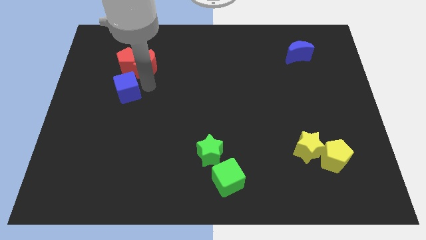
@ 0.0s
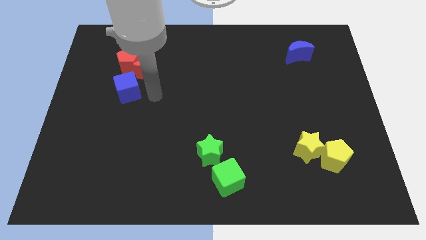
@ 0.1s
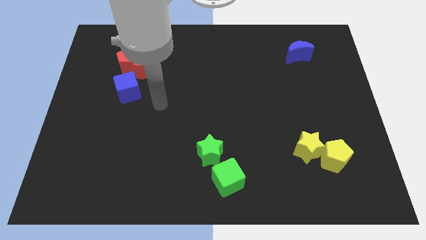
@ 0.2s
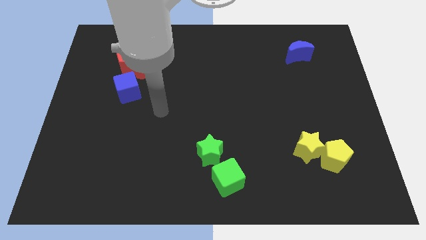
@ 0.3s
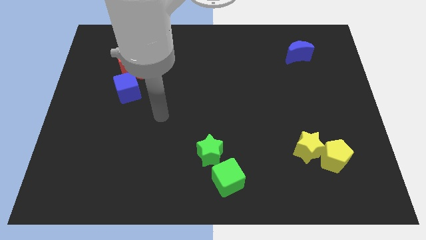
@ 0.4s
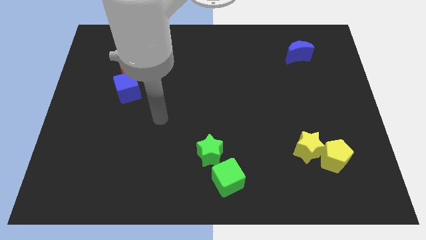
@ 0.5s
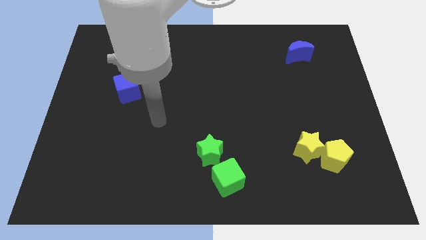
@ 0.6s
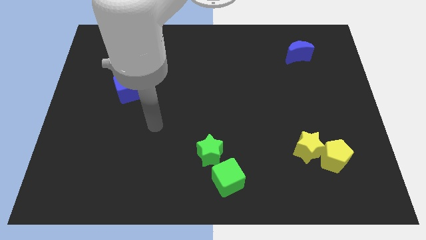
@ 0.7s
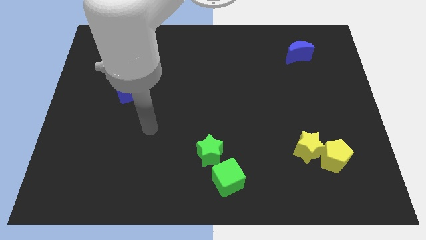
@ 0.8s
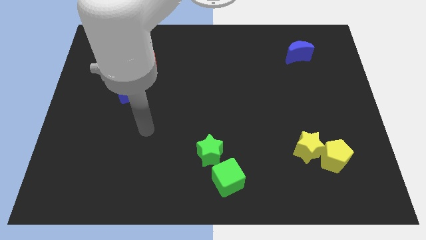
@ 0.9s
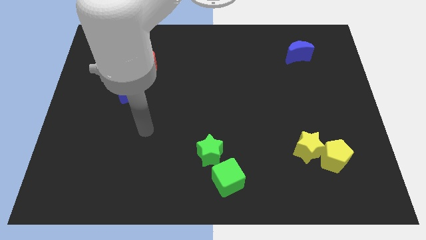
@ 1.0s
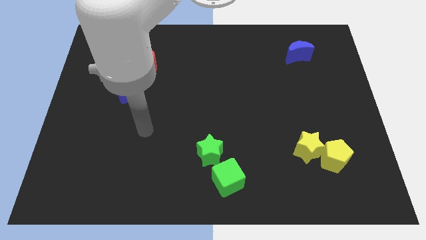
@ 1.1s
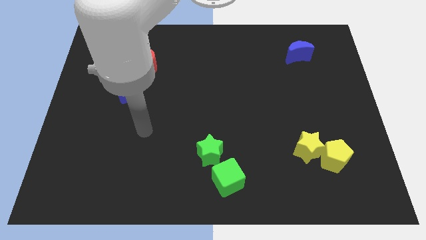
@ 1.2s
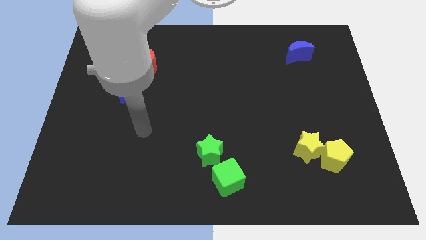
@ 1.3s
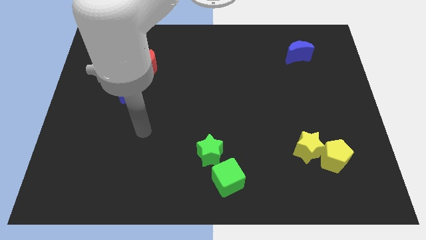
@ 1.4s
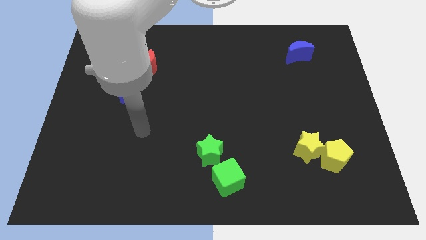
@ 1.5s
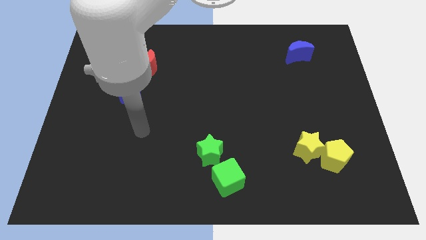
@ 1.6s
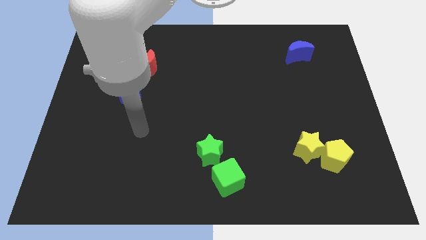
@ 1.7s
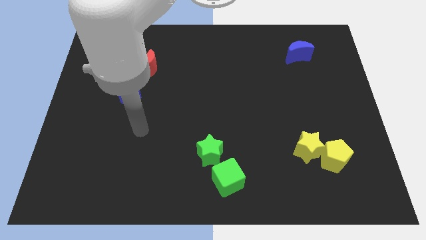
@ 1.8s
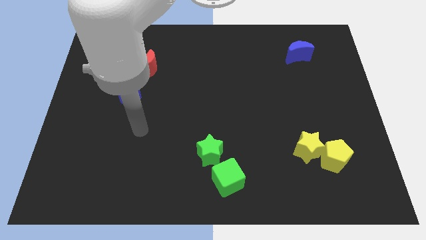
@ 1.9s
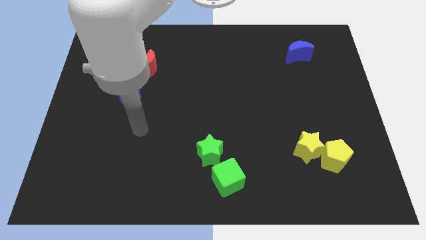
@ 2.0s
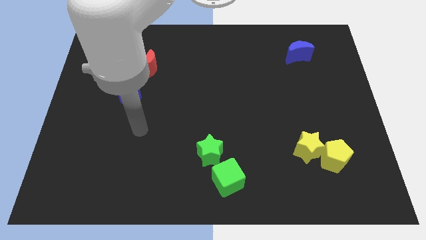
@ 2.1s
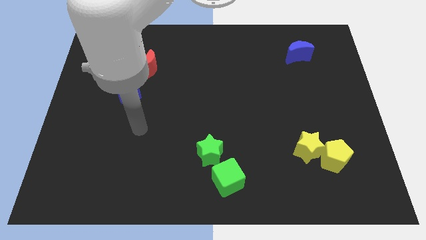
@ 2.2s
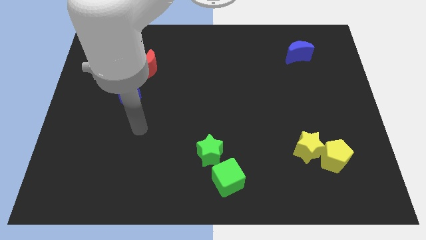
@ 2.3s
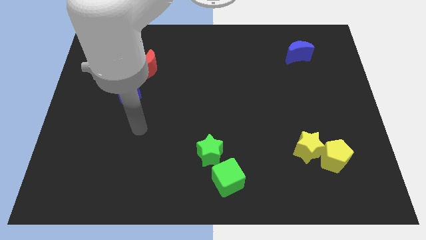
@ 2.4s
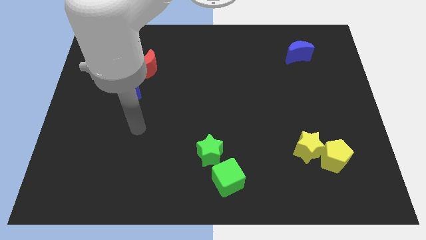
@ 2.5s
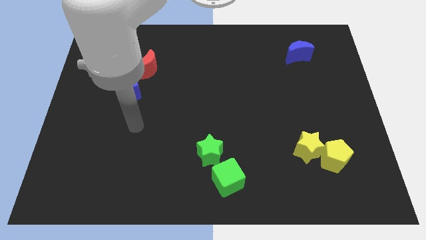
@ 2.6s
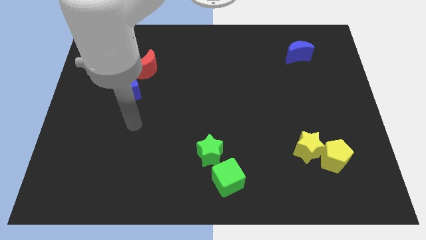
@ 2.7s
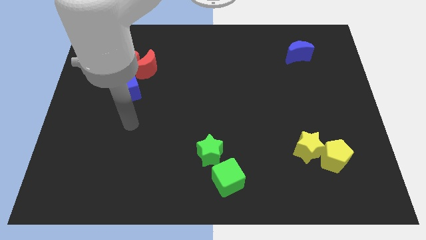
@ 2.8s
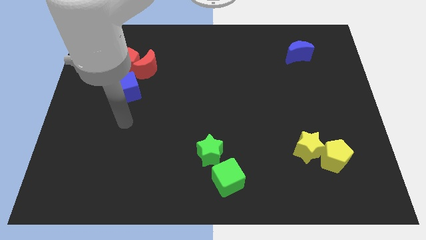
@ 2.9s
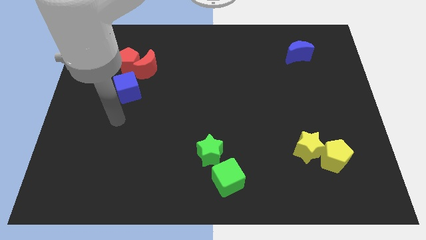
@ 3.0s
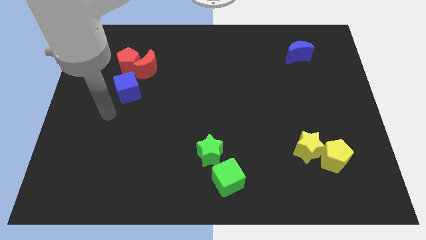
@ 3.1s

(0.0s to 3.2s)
move your arm below the blue cube

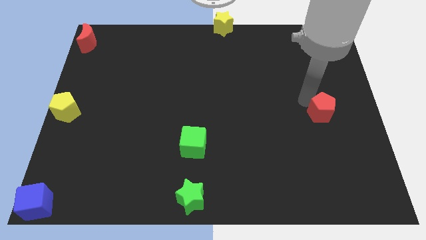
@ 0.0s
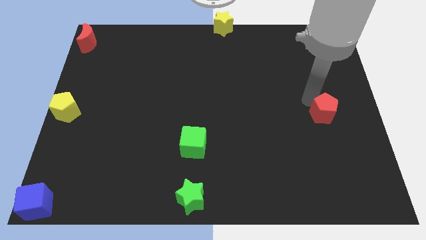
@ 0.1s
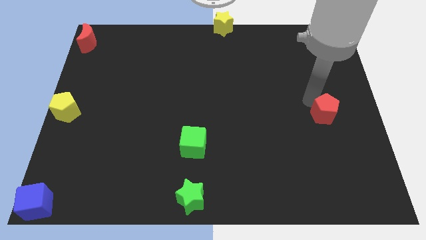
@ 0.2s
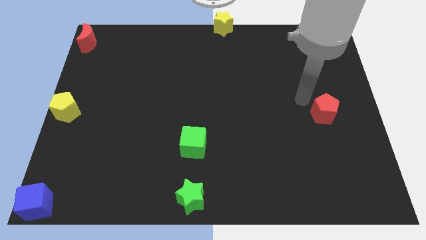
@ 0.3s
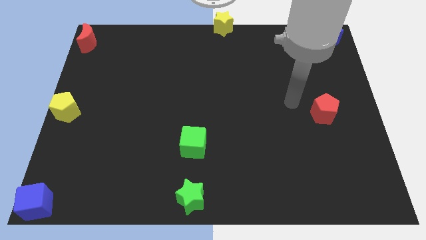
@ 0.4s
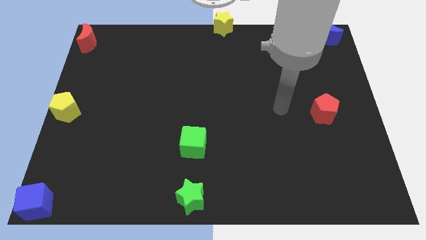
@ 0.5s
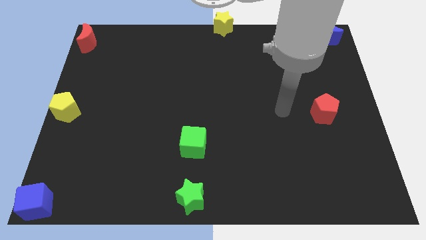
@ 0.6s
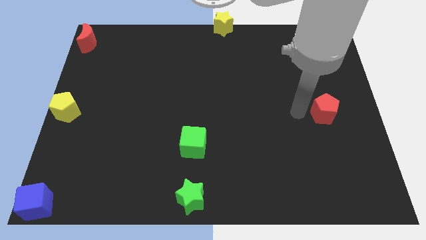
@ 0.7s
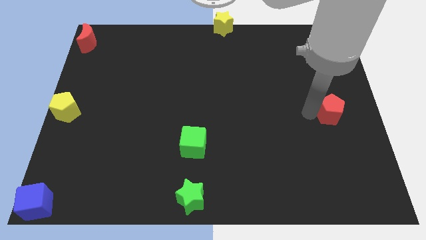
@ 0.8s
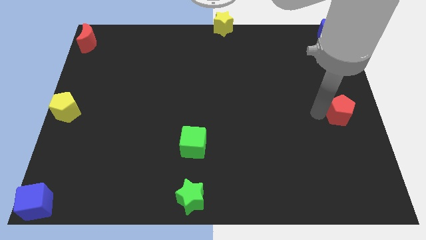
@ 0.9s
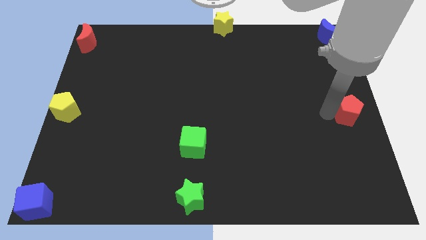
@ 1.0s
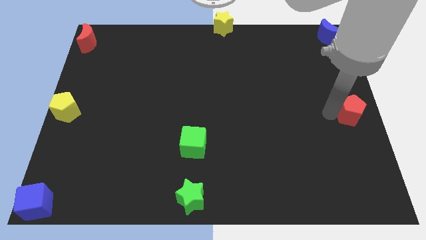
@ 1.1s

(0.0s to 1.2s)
move red penmtagon on the right center of the board

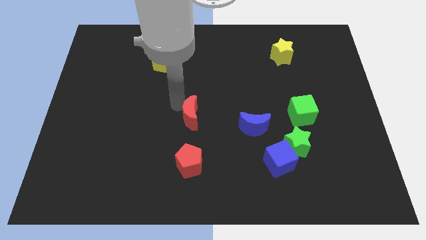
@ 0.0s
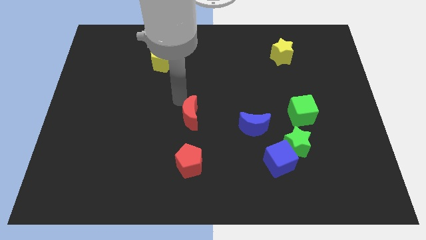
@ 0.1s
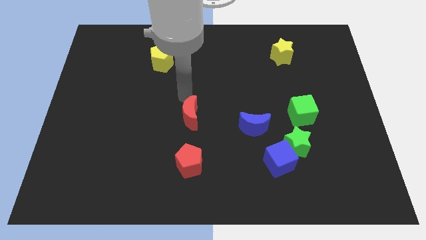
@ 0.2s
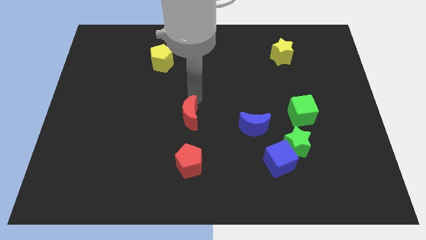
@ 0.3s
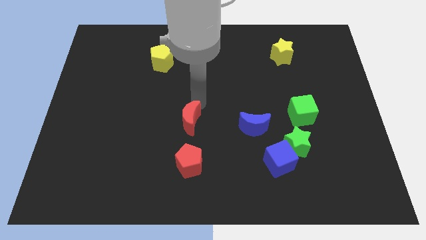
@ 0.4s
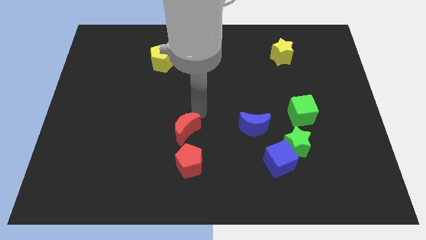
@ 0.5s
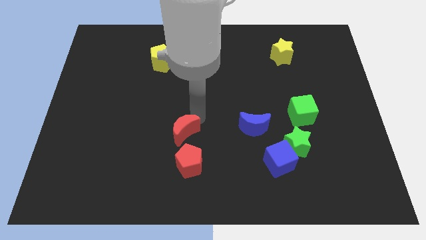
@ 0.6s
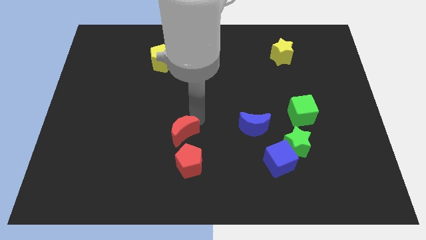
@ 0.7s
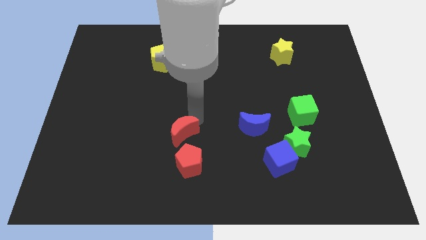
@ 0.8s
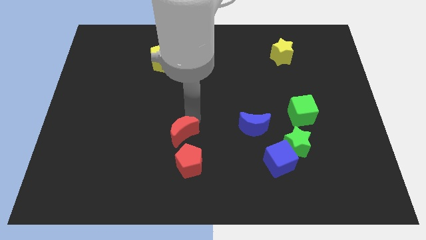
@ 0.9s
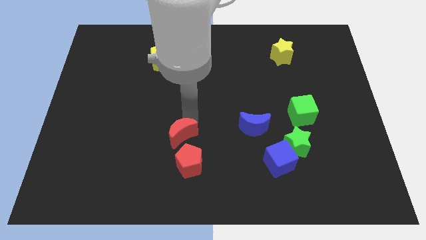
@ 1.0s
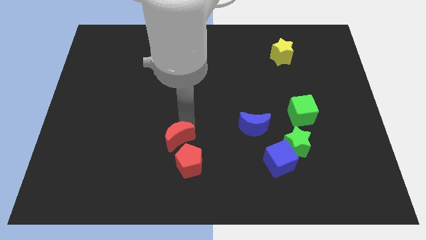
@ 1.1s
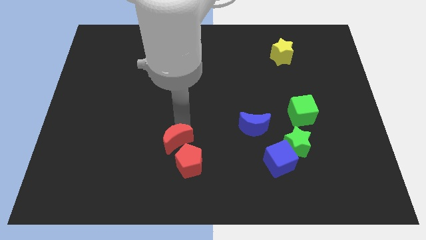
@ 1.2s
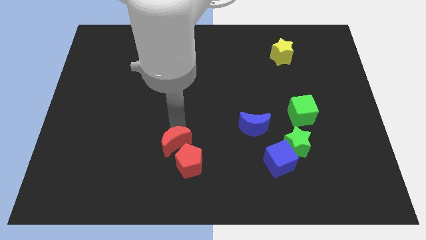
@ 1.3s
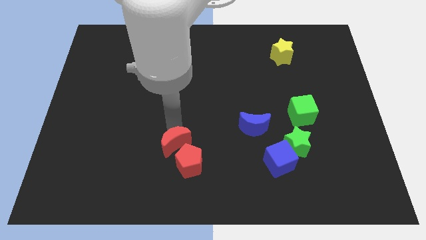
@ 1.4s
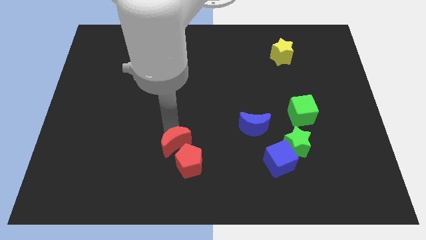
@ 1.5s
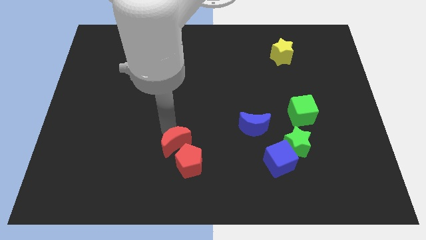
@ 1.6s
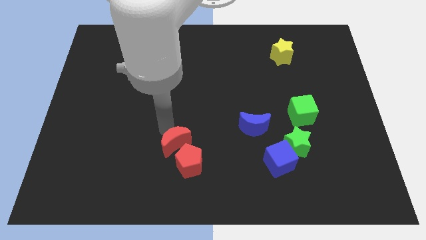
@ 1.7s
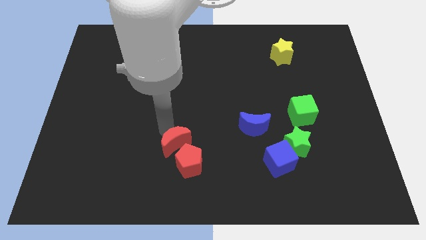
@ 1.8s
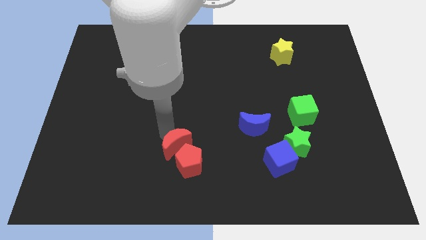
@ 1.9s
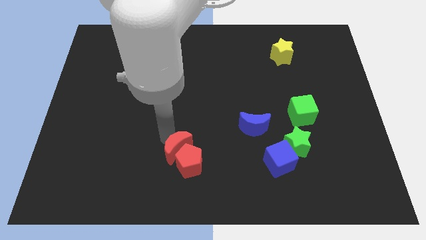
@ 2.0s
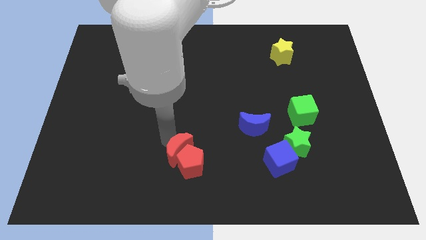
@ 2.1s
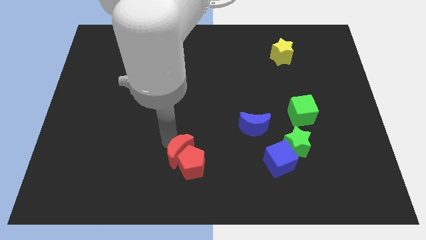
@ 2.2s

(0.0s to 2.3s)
move the red crescent to the top of the red pentagon

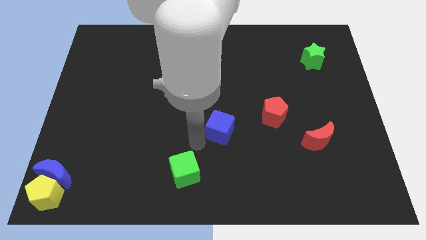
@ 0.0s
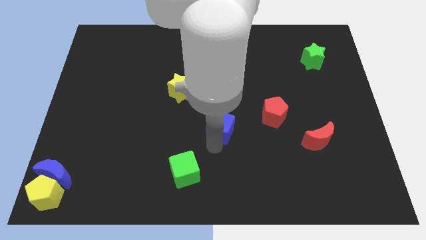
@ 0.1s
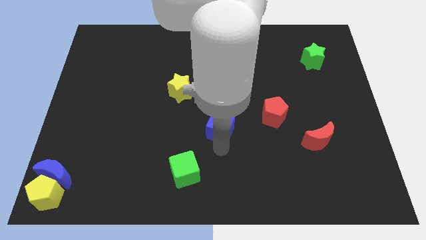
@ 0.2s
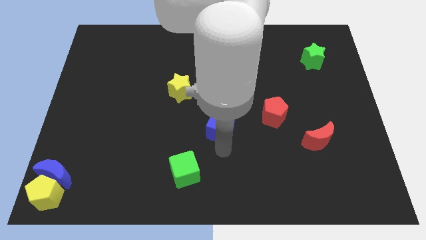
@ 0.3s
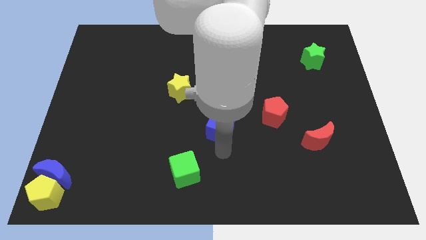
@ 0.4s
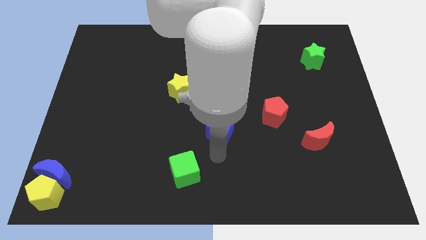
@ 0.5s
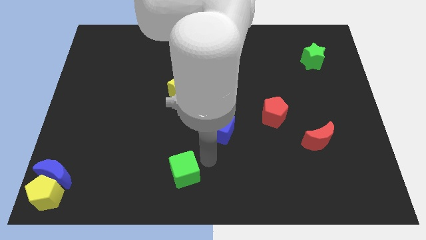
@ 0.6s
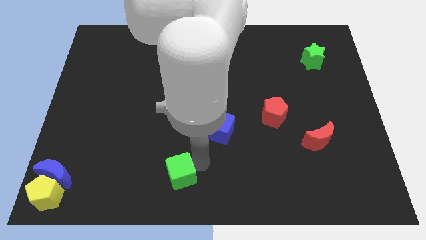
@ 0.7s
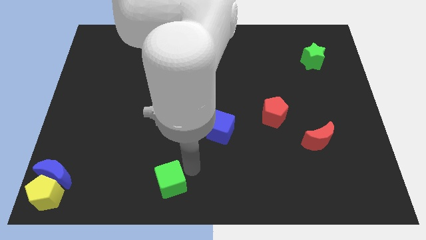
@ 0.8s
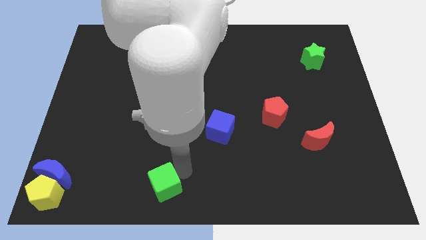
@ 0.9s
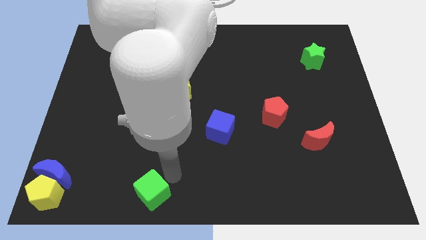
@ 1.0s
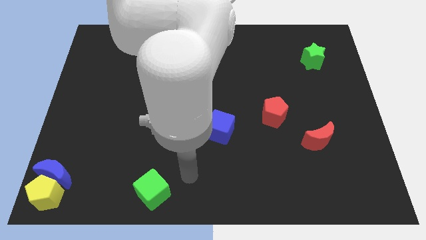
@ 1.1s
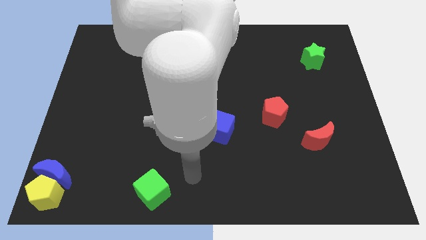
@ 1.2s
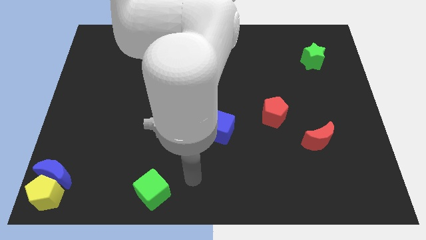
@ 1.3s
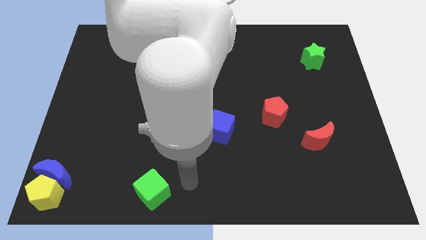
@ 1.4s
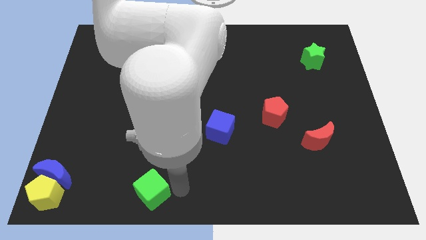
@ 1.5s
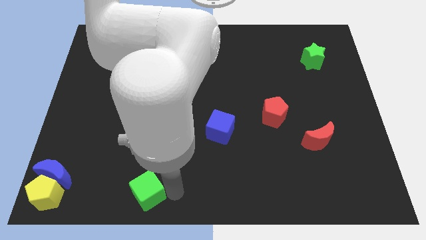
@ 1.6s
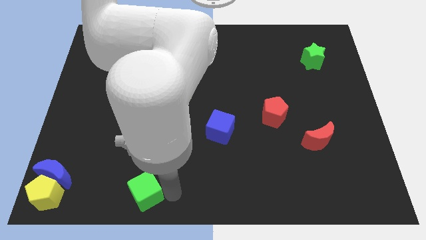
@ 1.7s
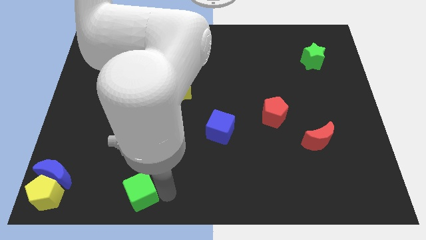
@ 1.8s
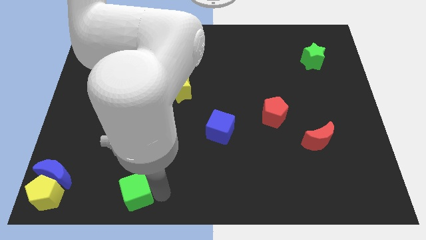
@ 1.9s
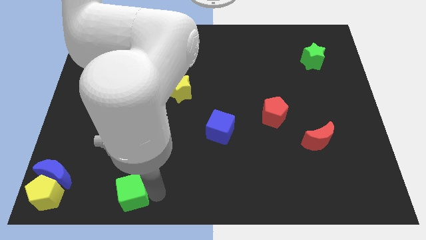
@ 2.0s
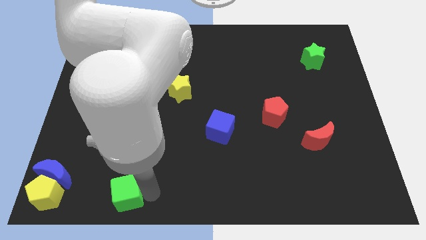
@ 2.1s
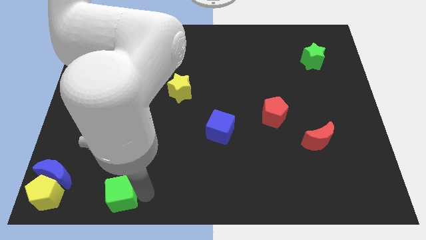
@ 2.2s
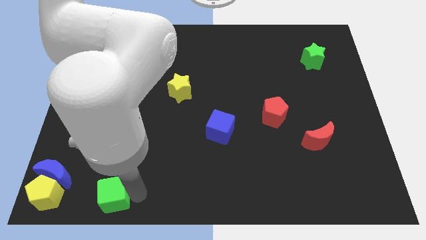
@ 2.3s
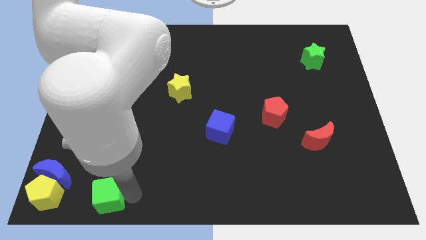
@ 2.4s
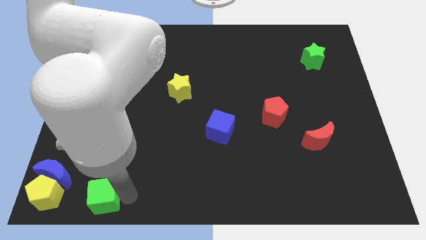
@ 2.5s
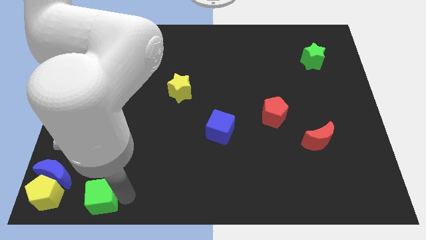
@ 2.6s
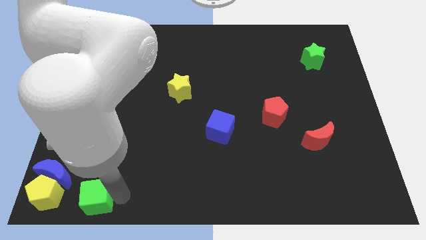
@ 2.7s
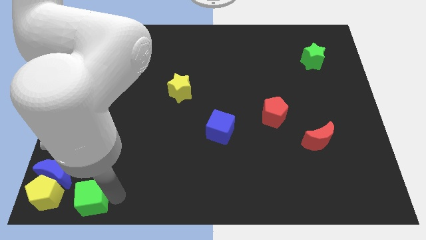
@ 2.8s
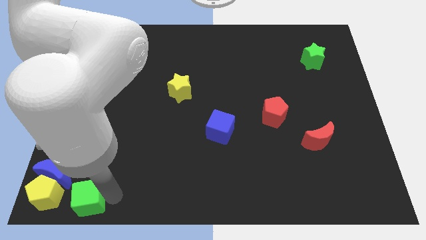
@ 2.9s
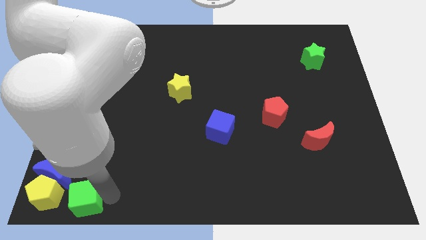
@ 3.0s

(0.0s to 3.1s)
drag green cube to the bottom left
